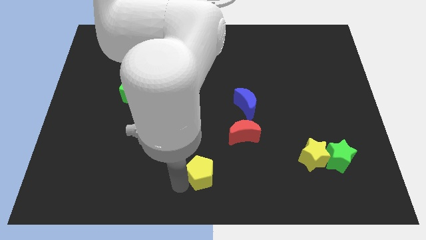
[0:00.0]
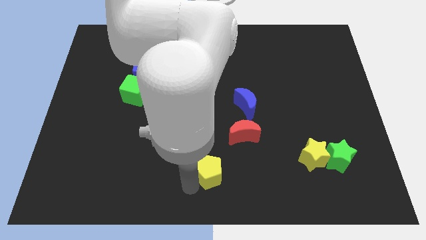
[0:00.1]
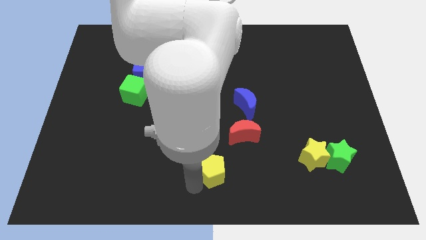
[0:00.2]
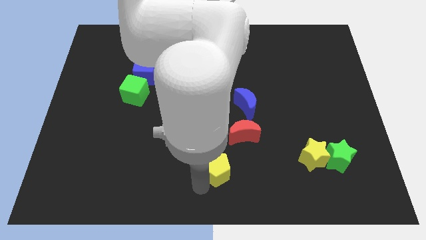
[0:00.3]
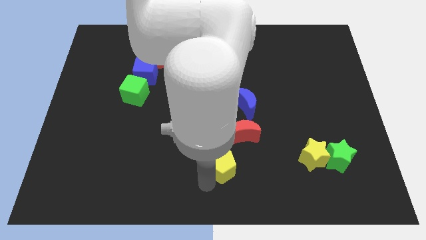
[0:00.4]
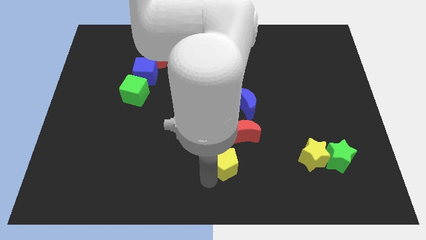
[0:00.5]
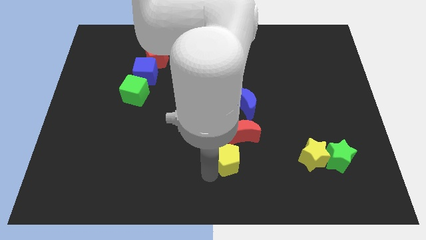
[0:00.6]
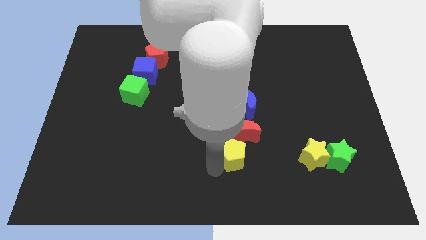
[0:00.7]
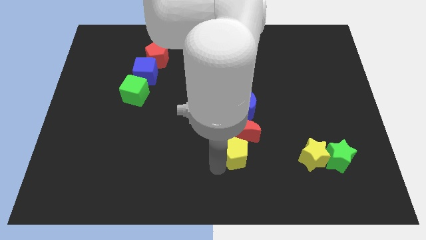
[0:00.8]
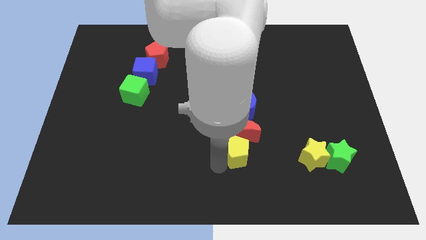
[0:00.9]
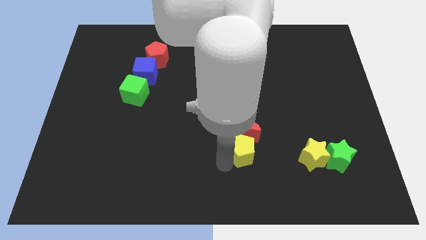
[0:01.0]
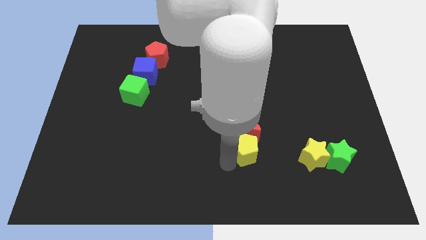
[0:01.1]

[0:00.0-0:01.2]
place the yellow pentagon to the left of the yellow star

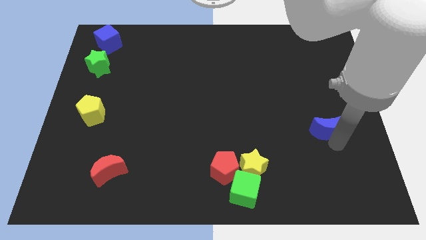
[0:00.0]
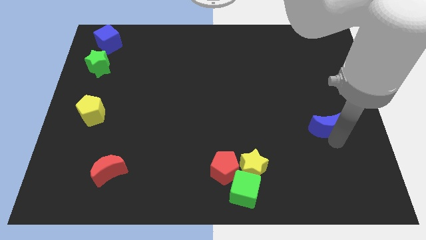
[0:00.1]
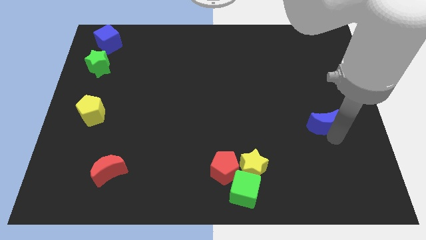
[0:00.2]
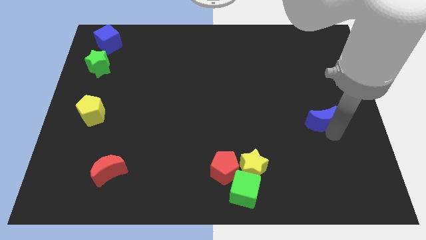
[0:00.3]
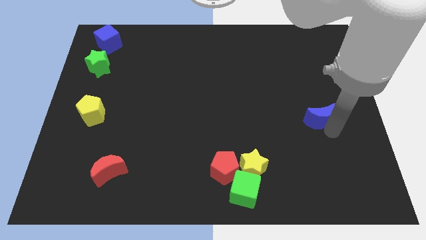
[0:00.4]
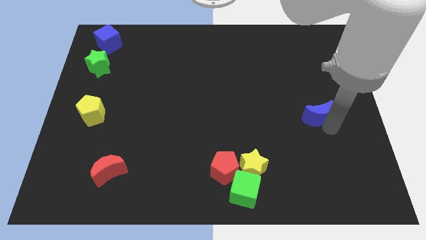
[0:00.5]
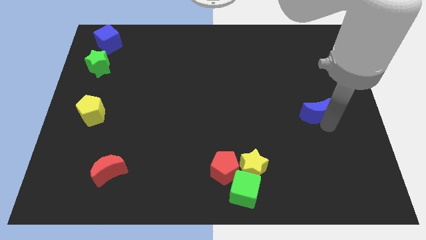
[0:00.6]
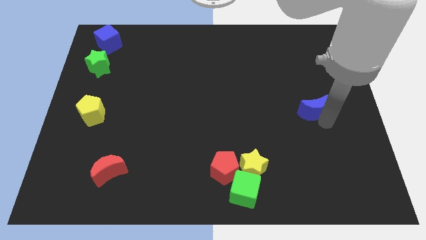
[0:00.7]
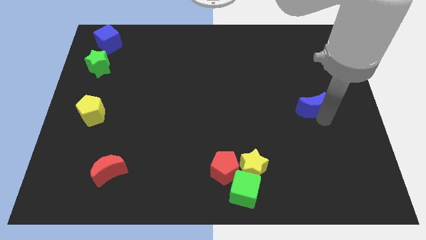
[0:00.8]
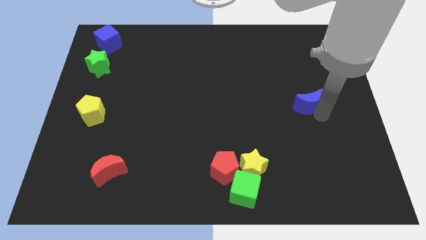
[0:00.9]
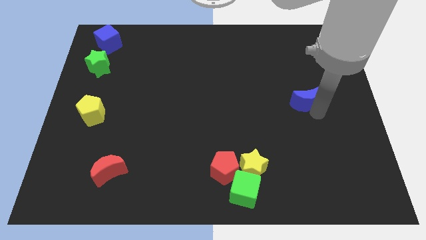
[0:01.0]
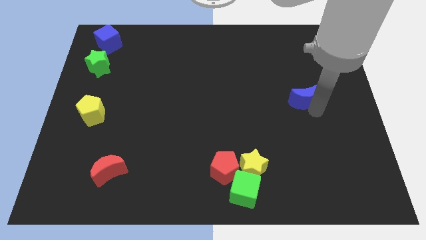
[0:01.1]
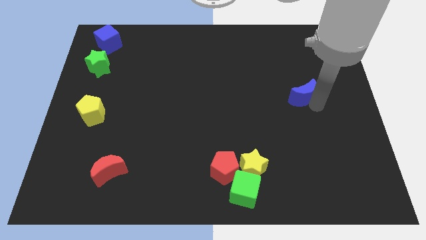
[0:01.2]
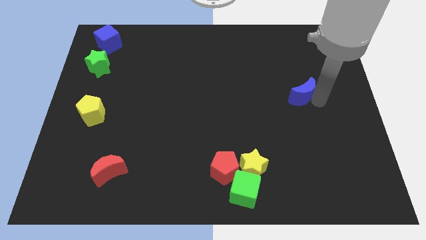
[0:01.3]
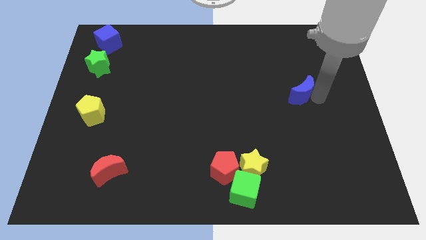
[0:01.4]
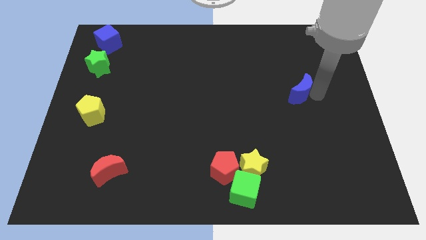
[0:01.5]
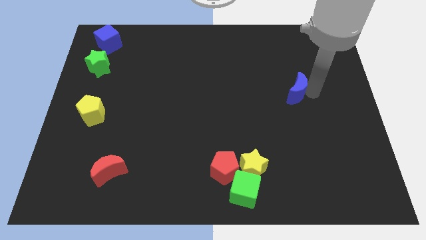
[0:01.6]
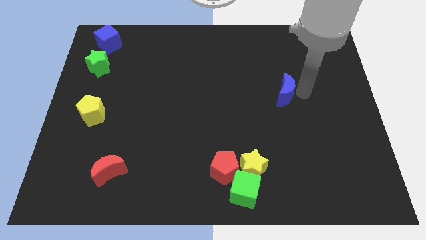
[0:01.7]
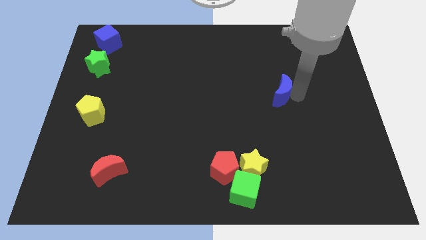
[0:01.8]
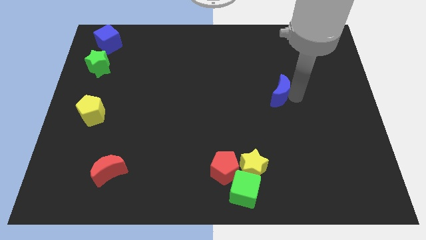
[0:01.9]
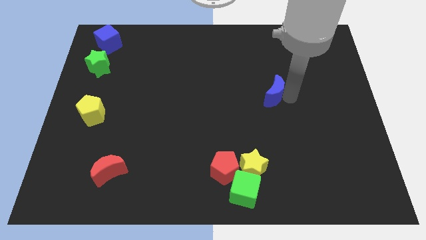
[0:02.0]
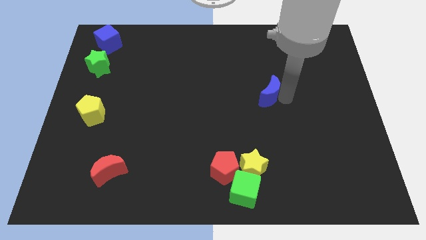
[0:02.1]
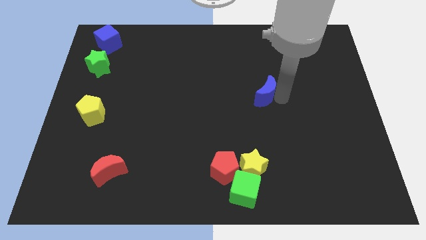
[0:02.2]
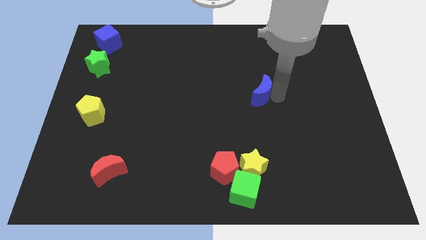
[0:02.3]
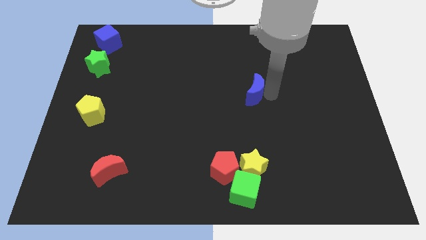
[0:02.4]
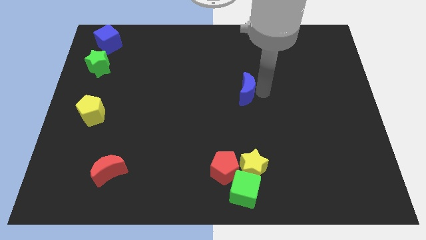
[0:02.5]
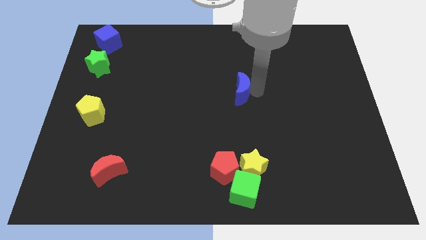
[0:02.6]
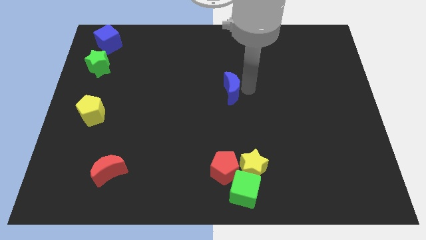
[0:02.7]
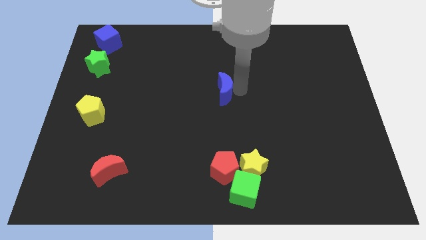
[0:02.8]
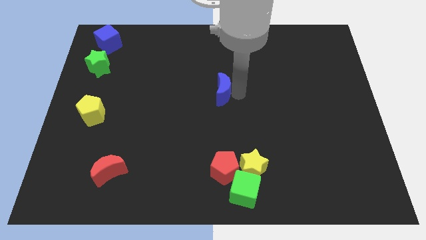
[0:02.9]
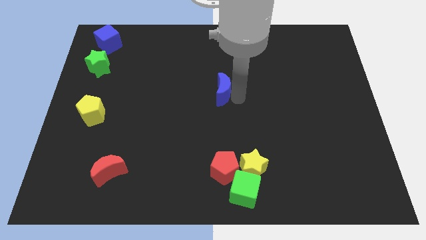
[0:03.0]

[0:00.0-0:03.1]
move the blue moon to the middle of the board

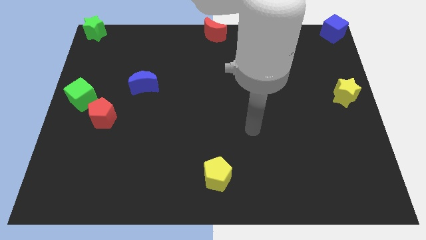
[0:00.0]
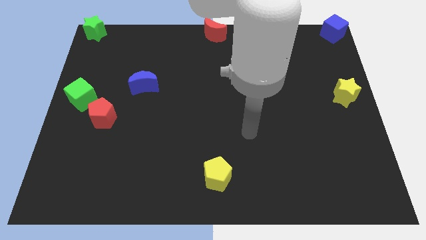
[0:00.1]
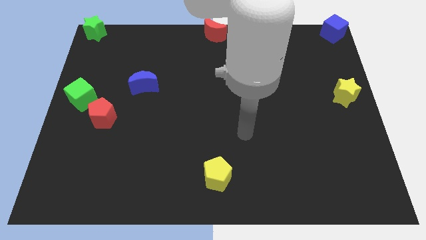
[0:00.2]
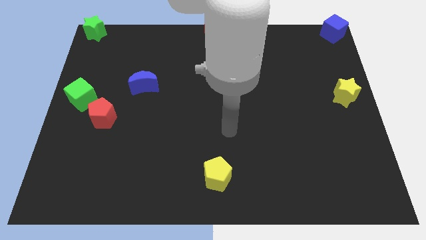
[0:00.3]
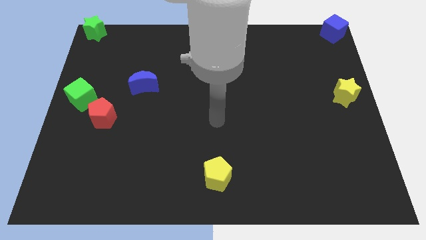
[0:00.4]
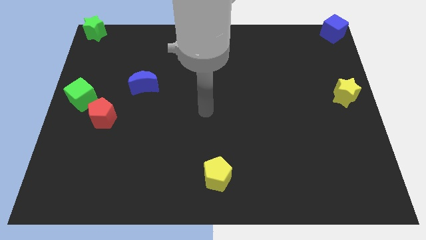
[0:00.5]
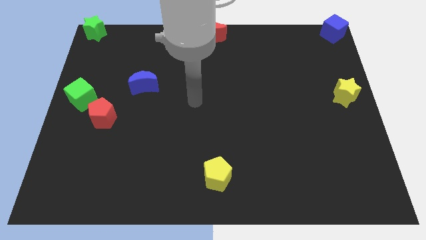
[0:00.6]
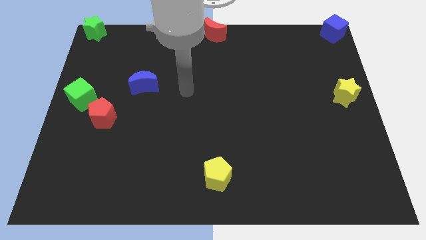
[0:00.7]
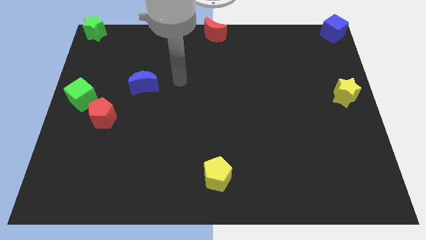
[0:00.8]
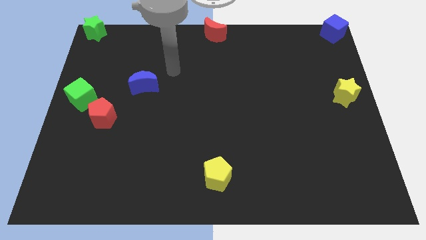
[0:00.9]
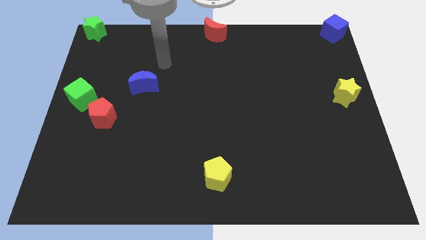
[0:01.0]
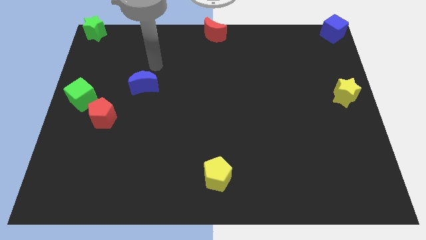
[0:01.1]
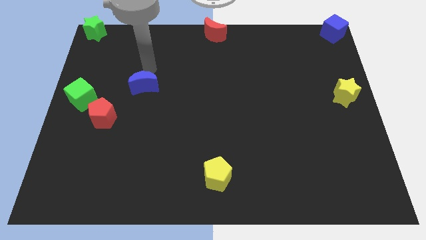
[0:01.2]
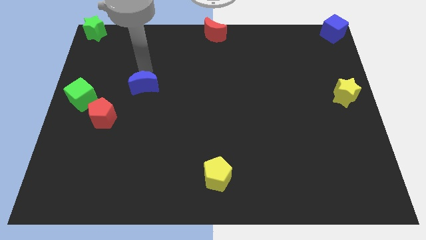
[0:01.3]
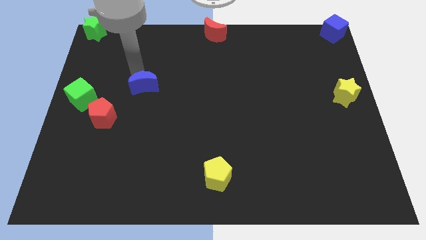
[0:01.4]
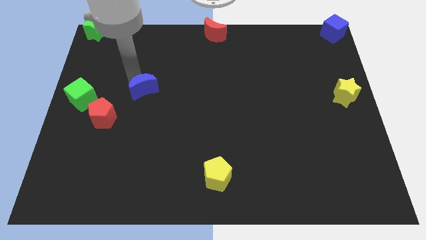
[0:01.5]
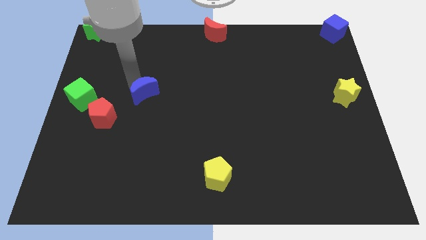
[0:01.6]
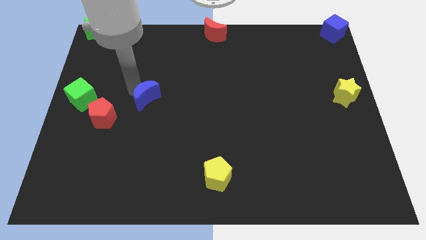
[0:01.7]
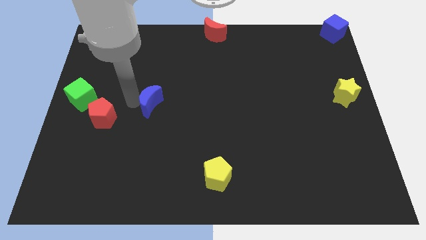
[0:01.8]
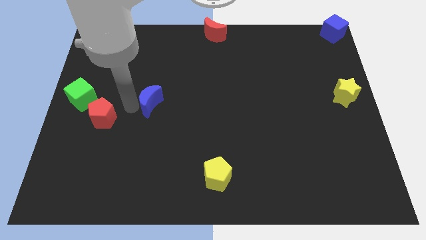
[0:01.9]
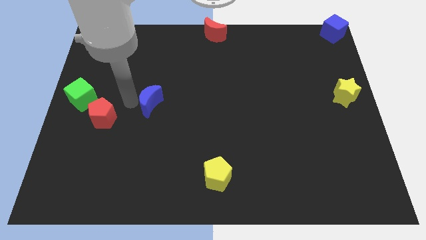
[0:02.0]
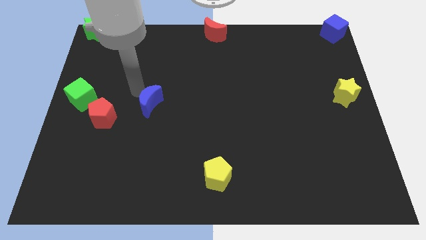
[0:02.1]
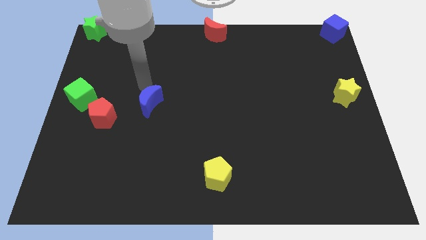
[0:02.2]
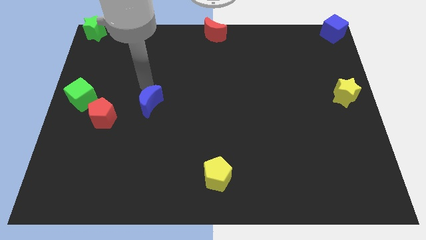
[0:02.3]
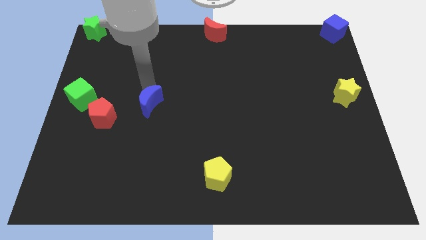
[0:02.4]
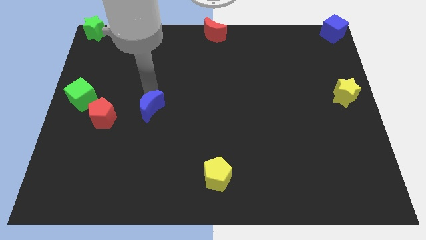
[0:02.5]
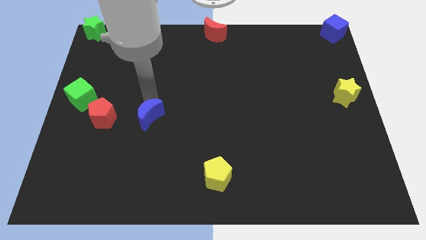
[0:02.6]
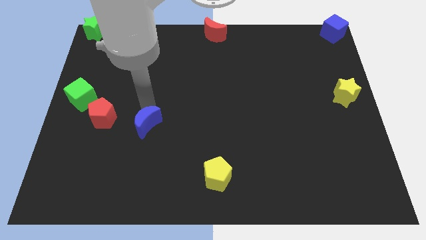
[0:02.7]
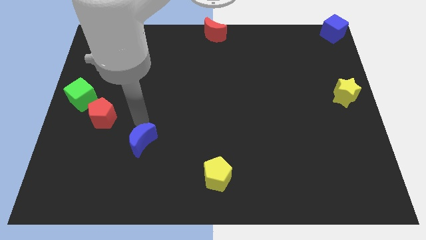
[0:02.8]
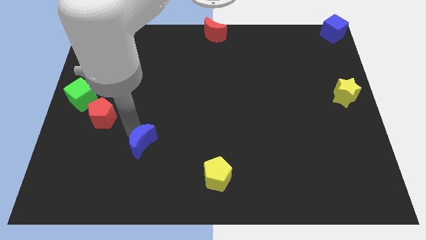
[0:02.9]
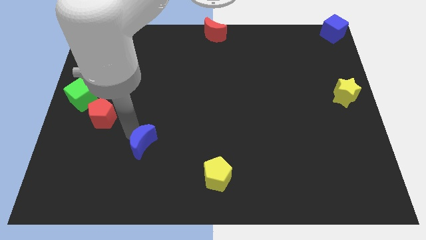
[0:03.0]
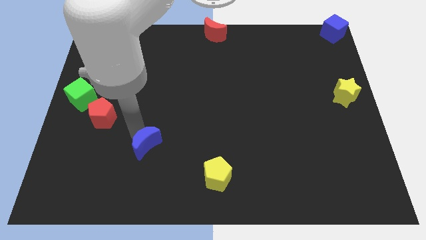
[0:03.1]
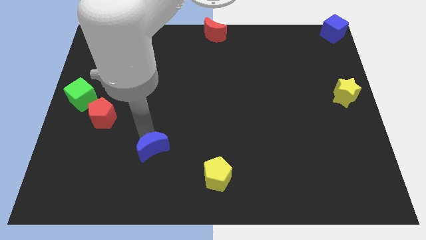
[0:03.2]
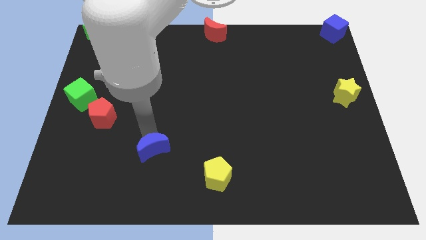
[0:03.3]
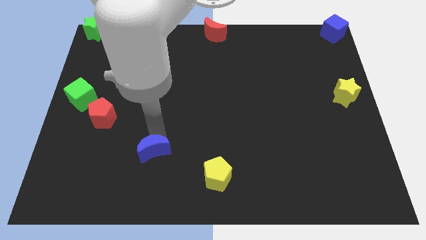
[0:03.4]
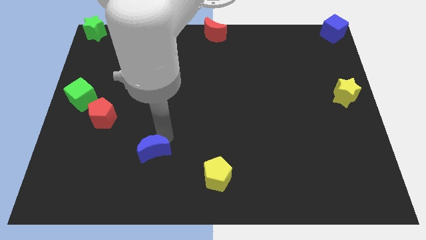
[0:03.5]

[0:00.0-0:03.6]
push the blue crescent between the red pentagon and yellow pentagon

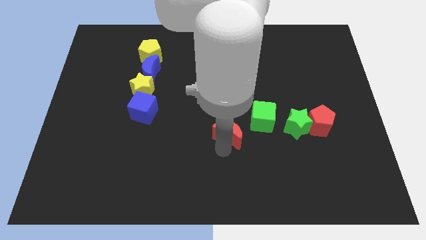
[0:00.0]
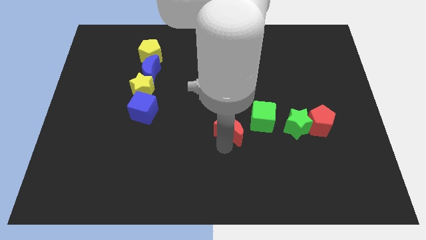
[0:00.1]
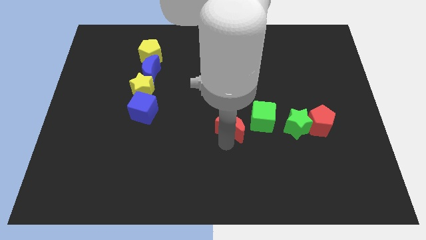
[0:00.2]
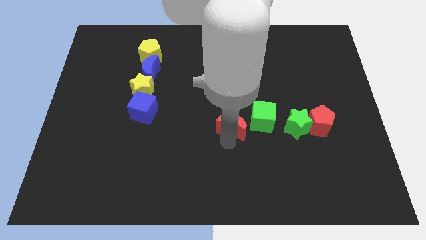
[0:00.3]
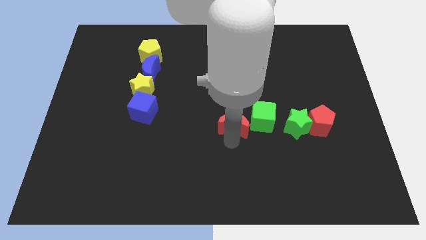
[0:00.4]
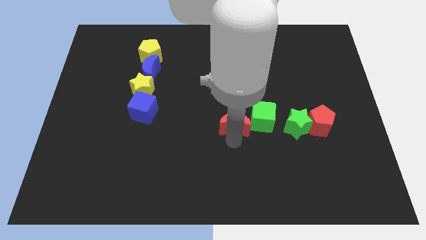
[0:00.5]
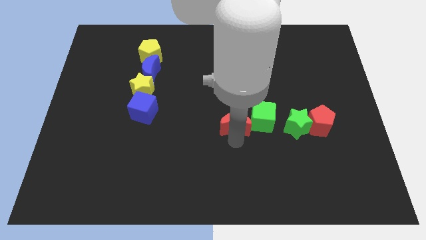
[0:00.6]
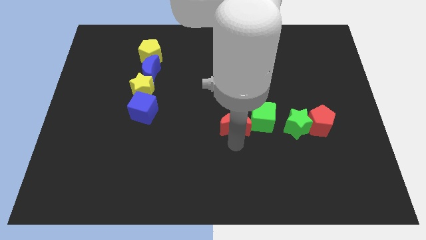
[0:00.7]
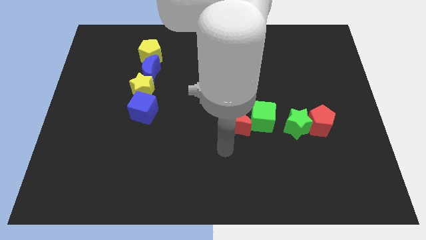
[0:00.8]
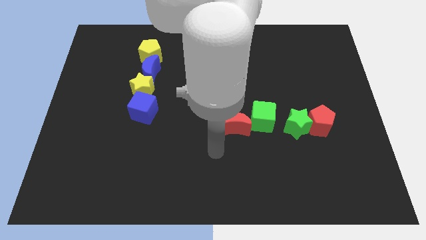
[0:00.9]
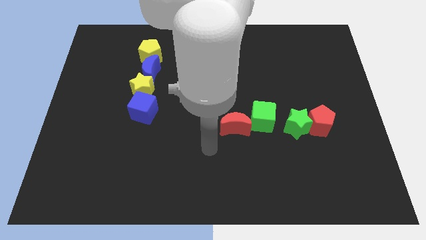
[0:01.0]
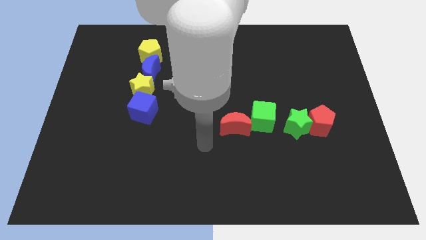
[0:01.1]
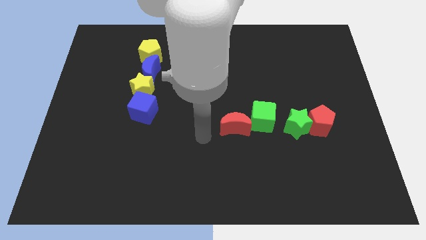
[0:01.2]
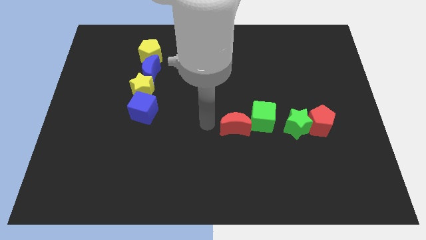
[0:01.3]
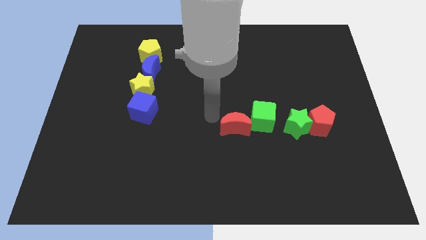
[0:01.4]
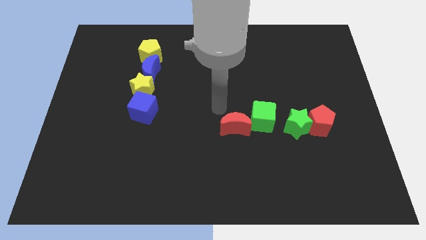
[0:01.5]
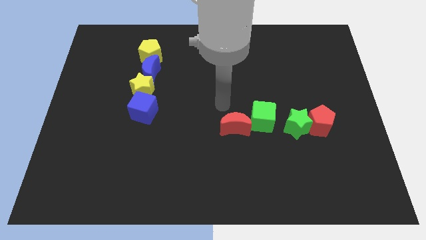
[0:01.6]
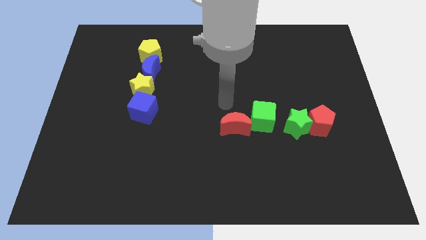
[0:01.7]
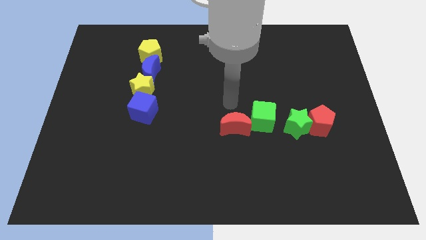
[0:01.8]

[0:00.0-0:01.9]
move the red crescent to the left of the green cube
